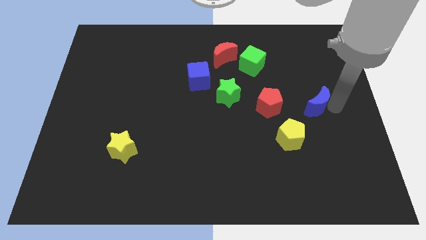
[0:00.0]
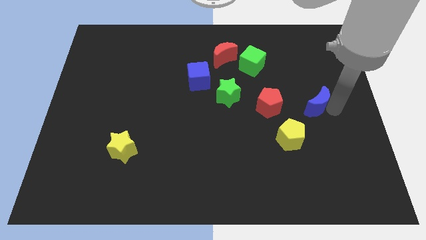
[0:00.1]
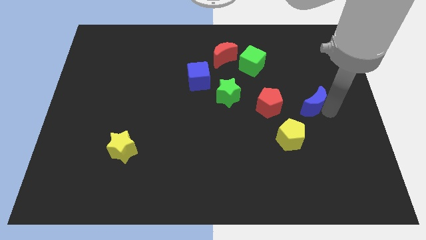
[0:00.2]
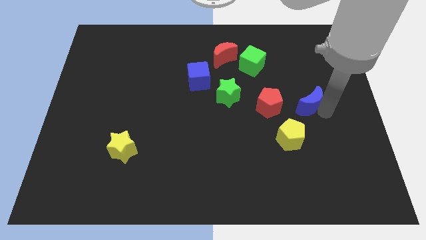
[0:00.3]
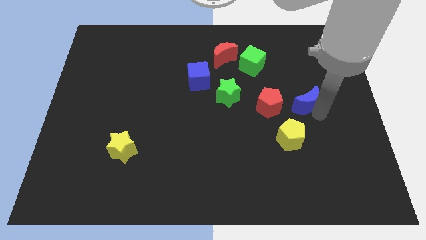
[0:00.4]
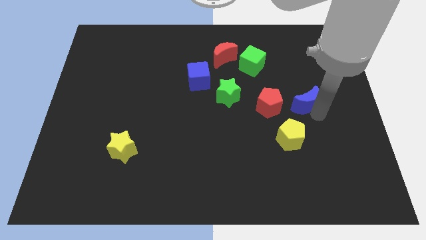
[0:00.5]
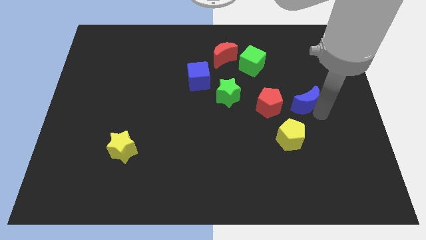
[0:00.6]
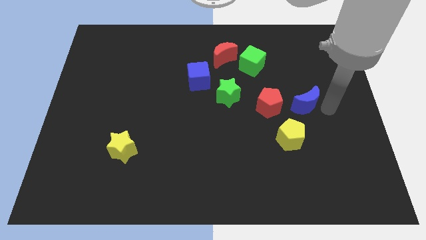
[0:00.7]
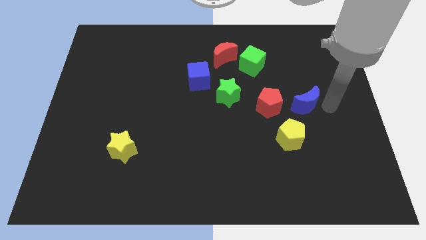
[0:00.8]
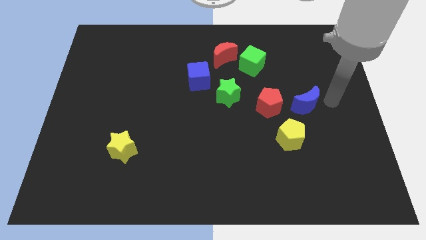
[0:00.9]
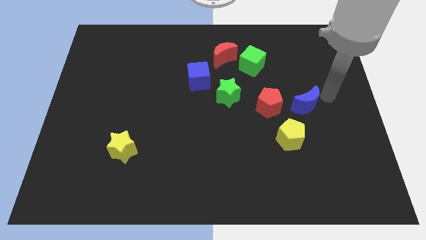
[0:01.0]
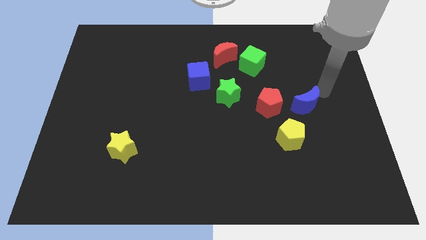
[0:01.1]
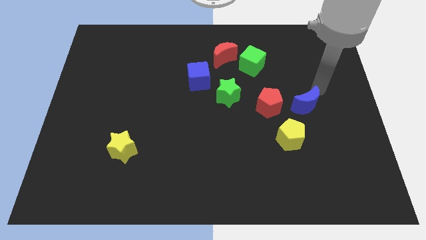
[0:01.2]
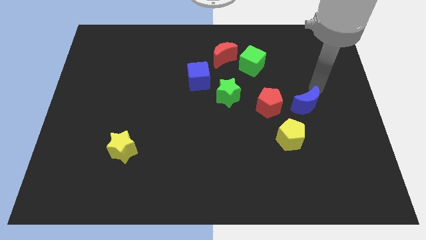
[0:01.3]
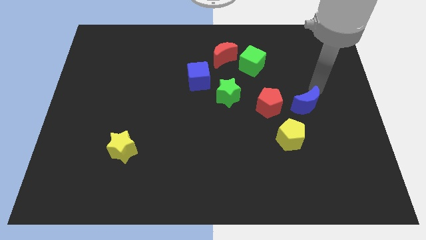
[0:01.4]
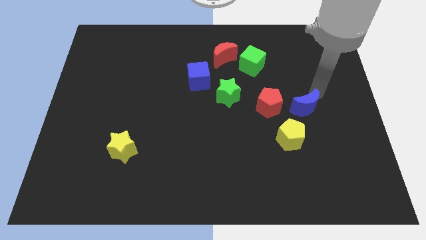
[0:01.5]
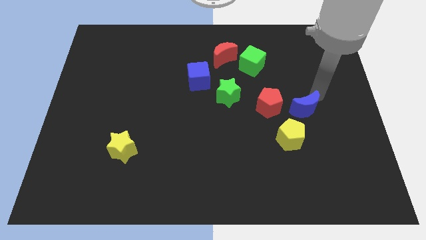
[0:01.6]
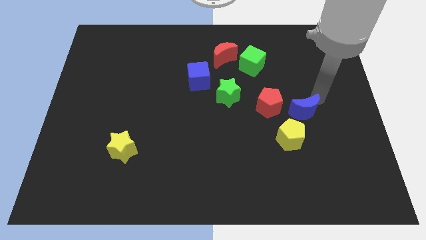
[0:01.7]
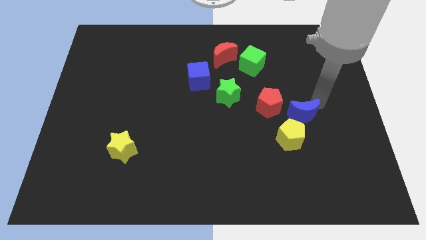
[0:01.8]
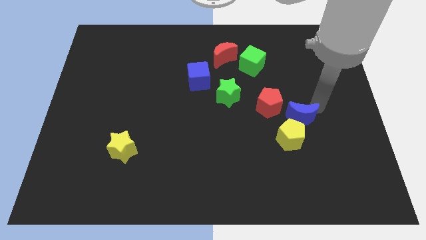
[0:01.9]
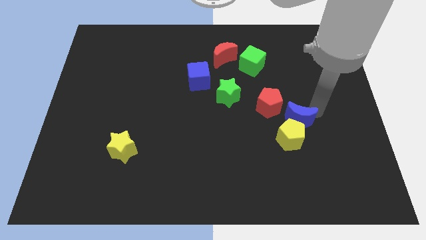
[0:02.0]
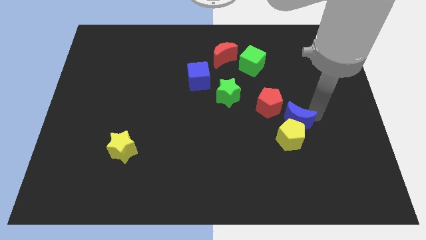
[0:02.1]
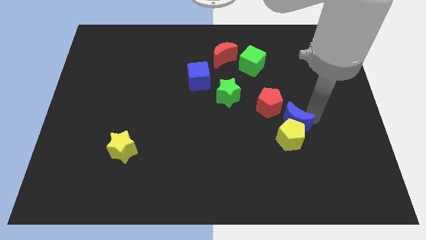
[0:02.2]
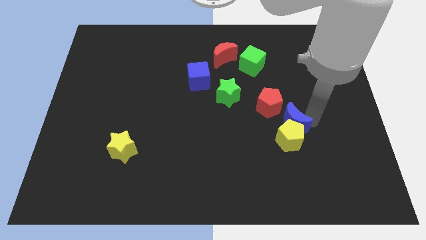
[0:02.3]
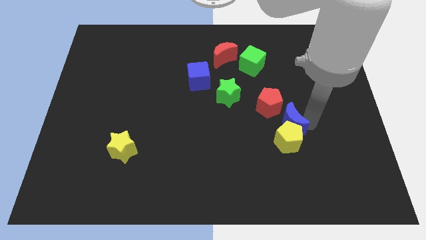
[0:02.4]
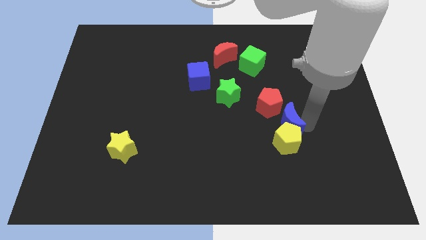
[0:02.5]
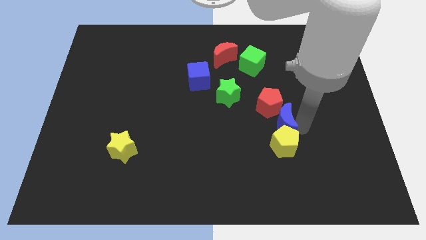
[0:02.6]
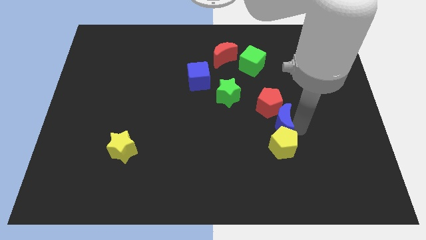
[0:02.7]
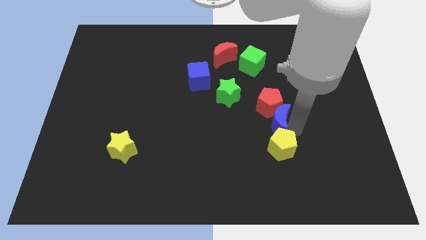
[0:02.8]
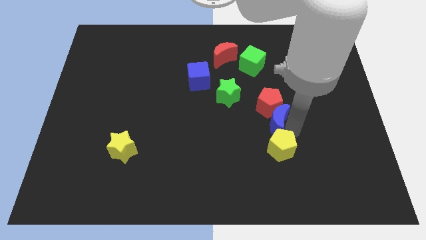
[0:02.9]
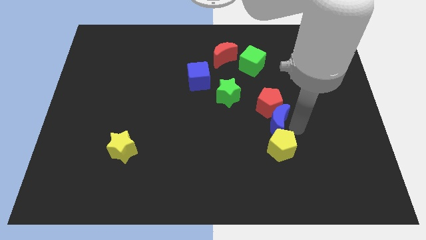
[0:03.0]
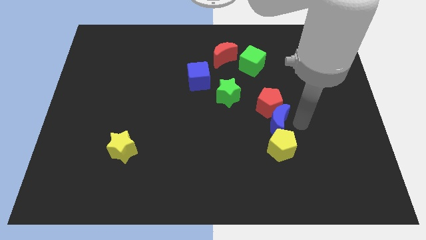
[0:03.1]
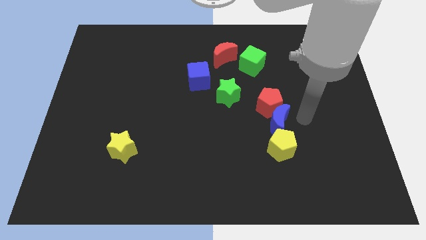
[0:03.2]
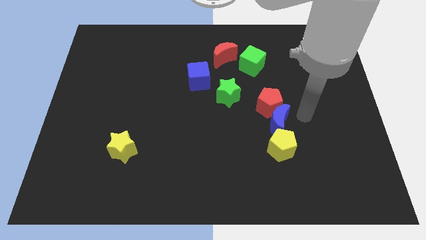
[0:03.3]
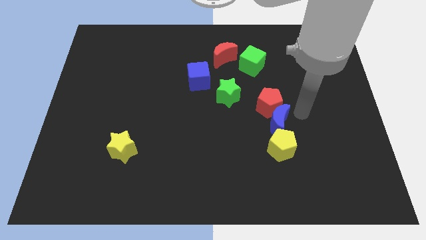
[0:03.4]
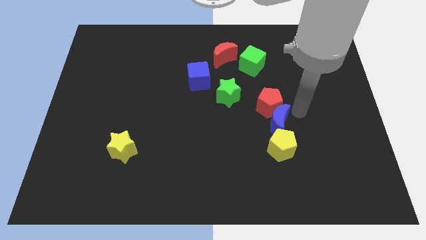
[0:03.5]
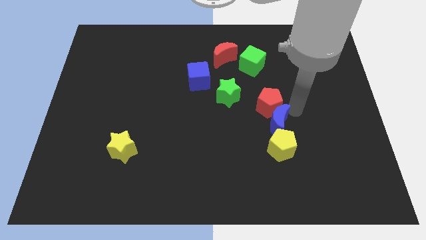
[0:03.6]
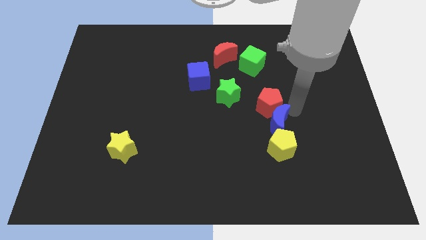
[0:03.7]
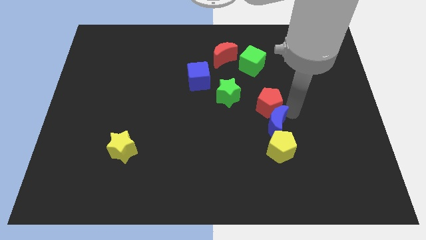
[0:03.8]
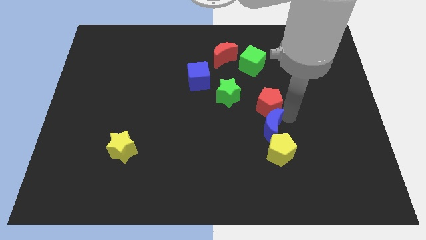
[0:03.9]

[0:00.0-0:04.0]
drag blue moon in between yellow pentagon and red pentagon

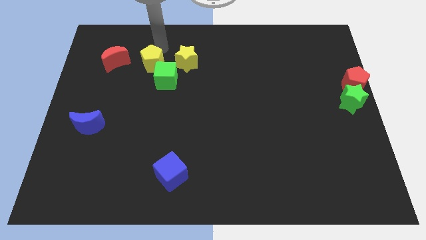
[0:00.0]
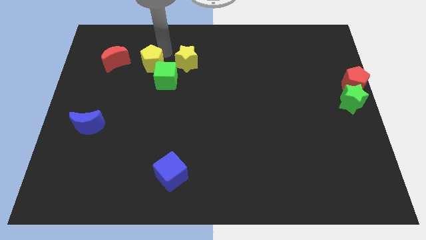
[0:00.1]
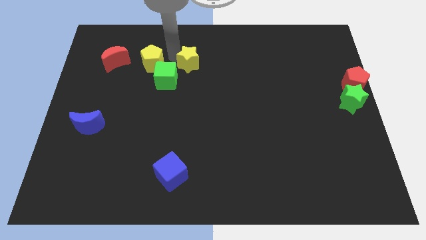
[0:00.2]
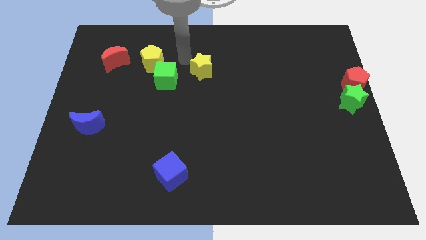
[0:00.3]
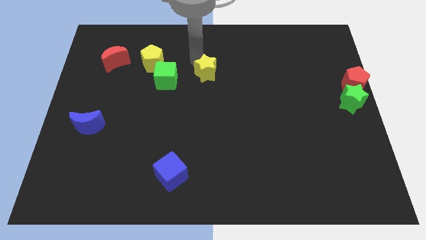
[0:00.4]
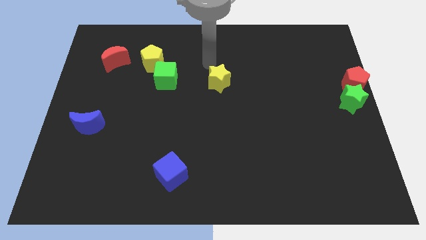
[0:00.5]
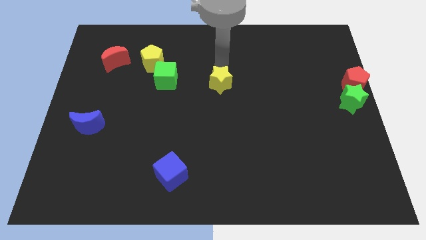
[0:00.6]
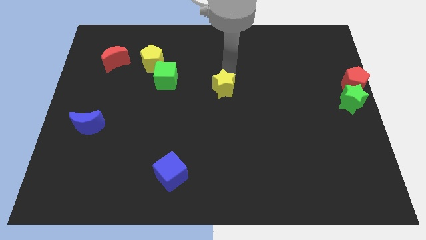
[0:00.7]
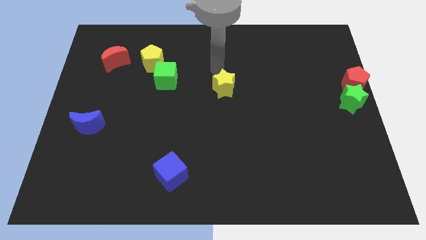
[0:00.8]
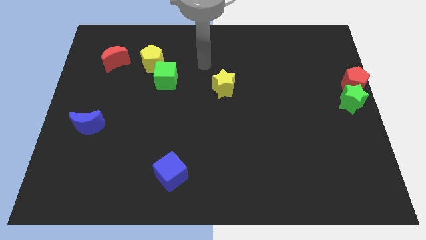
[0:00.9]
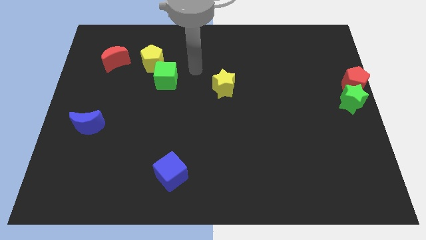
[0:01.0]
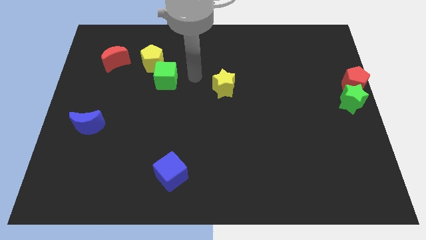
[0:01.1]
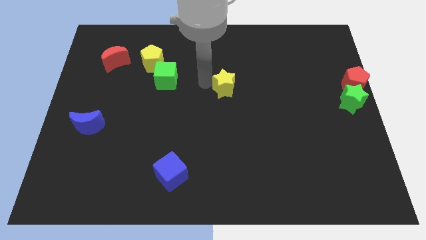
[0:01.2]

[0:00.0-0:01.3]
push the yellow star to the center of the board

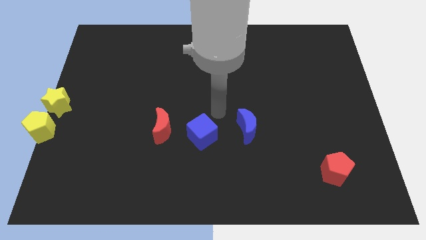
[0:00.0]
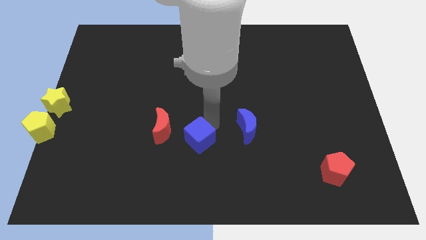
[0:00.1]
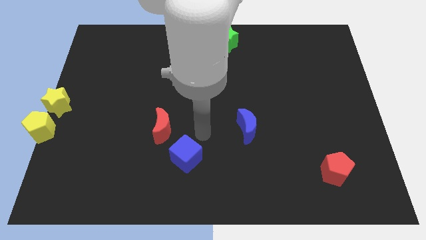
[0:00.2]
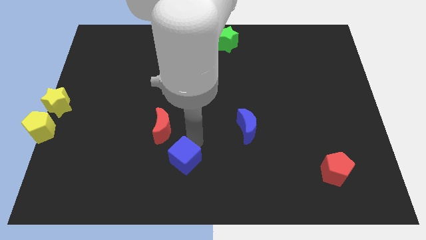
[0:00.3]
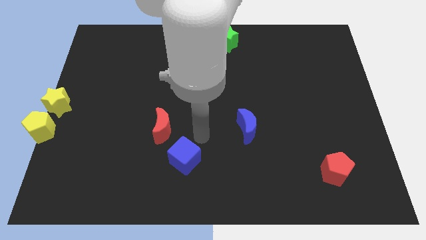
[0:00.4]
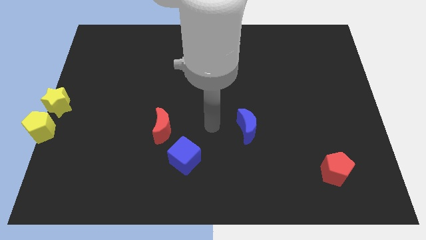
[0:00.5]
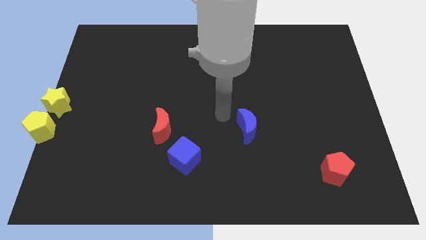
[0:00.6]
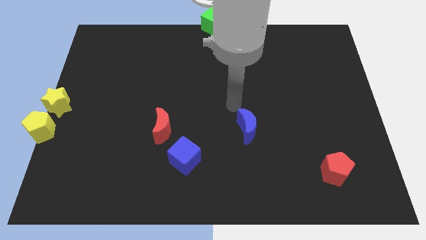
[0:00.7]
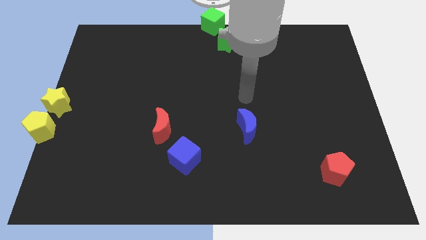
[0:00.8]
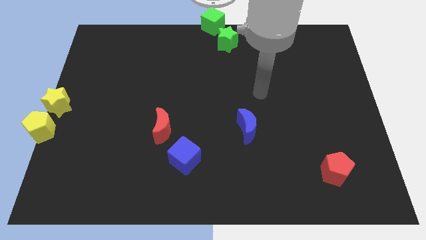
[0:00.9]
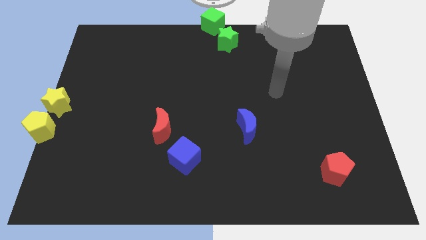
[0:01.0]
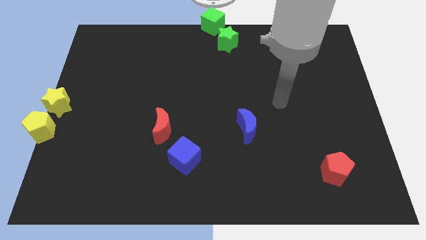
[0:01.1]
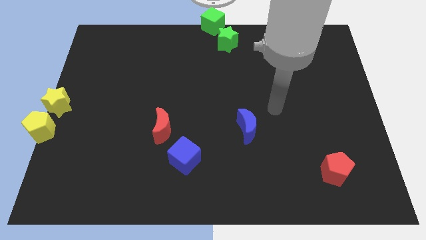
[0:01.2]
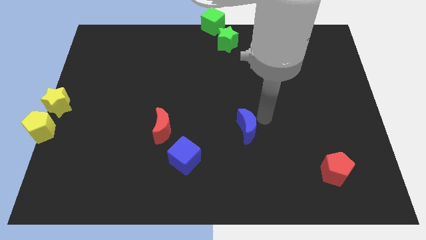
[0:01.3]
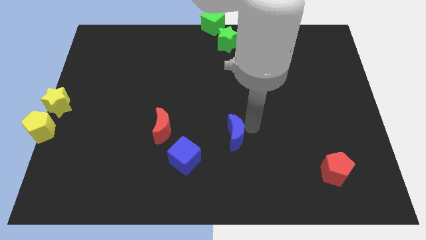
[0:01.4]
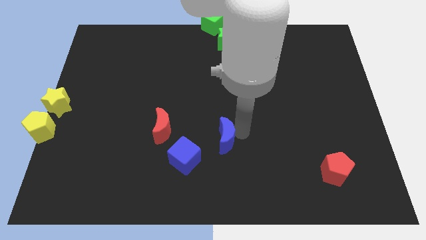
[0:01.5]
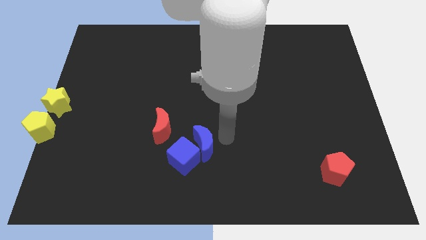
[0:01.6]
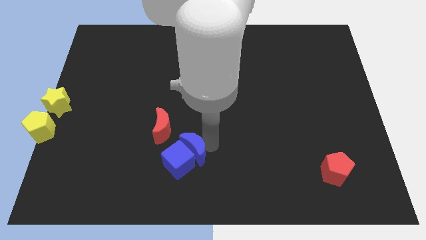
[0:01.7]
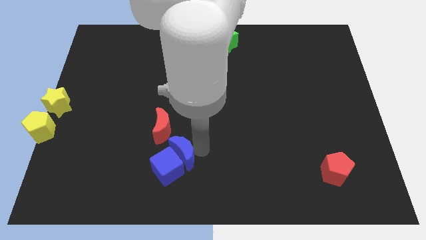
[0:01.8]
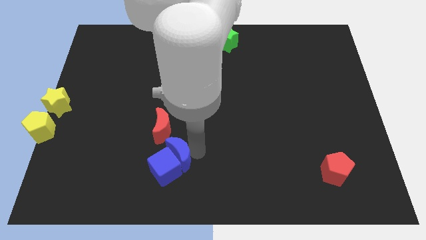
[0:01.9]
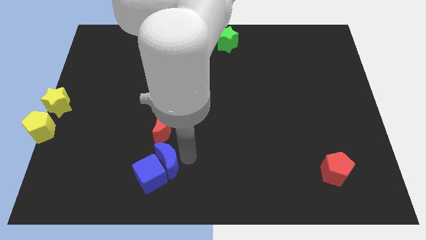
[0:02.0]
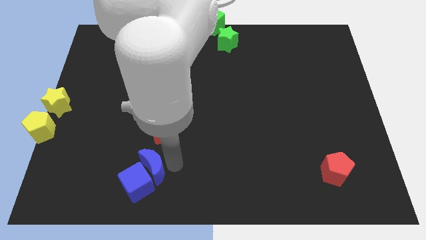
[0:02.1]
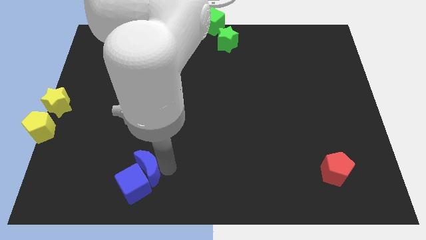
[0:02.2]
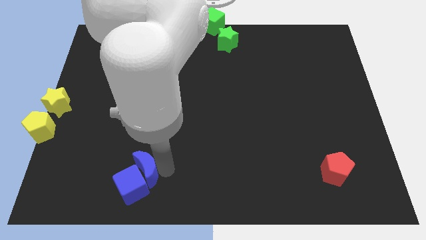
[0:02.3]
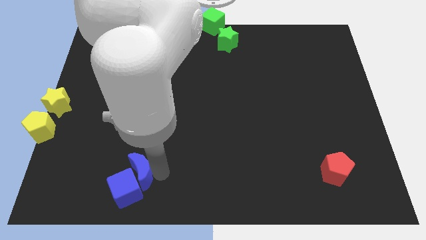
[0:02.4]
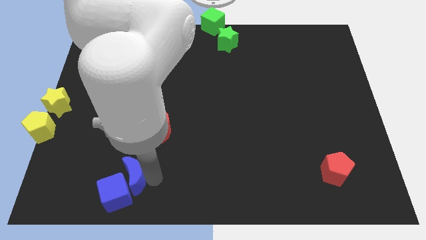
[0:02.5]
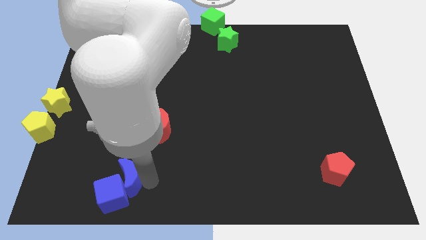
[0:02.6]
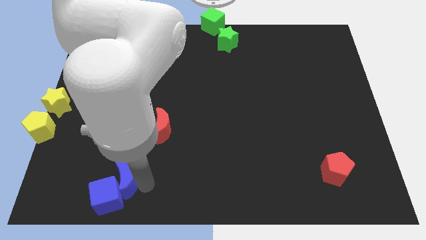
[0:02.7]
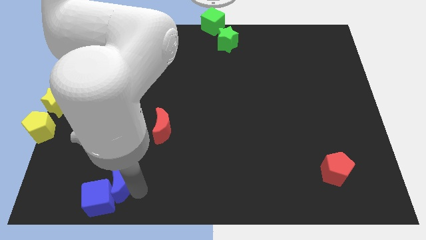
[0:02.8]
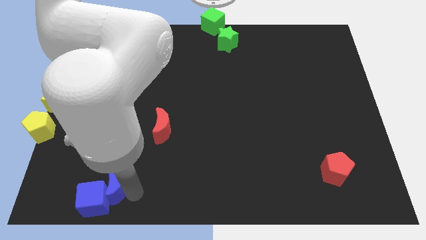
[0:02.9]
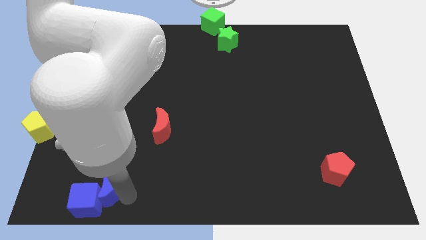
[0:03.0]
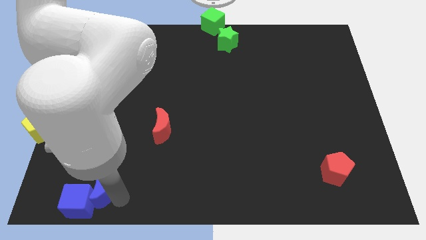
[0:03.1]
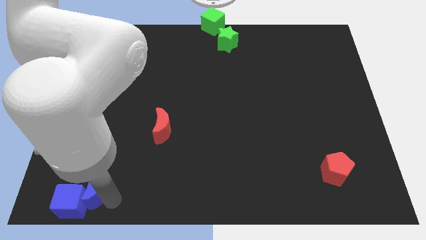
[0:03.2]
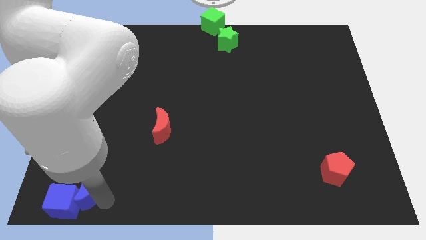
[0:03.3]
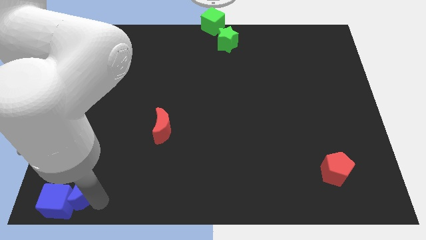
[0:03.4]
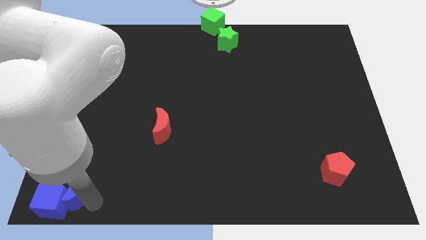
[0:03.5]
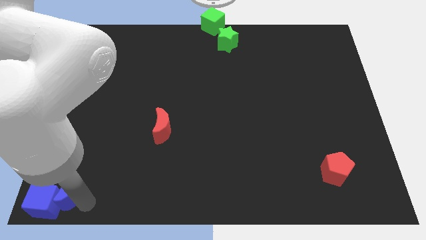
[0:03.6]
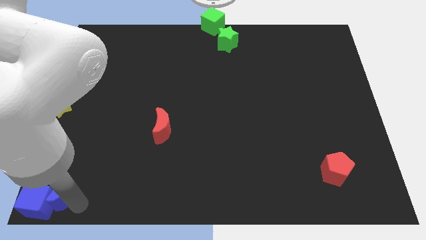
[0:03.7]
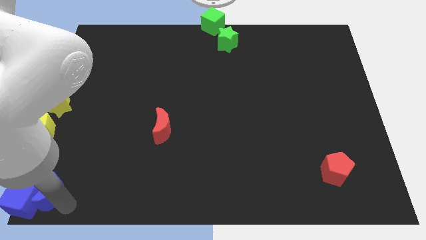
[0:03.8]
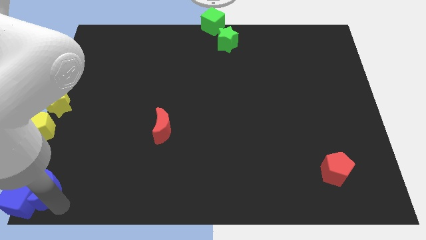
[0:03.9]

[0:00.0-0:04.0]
push the blue cube along with the blue moon towards the bottom left corner of the board
